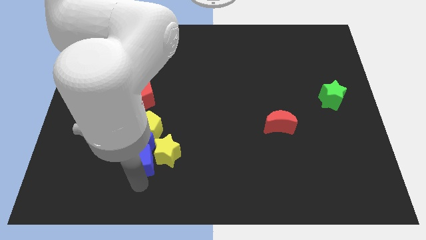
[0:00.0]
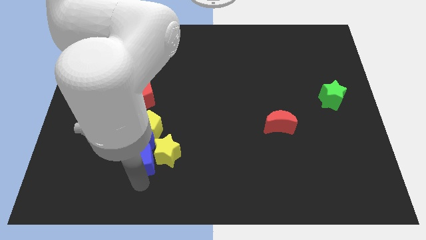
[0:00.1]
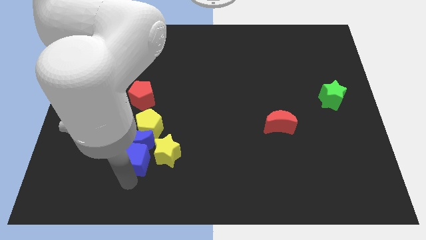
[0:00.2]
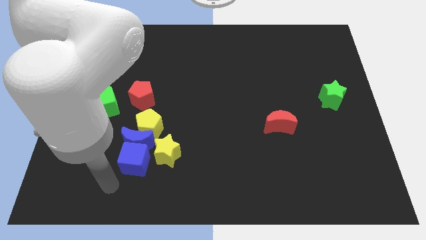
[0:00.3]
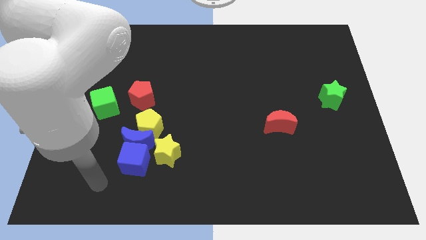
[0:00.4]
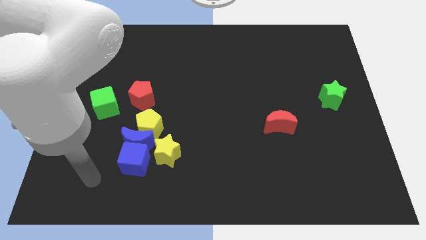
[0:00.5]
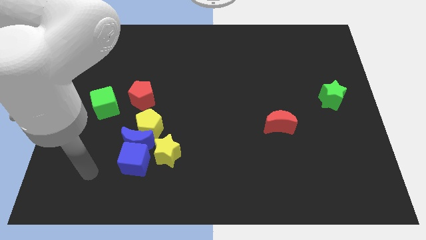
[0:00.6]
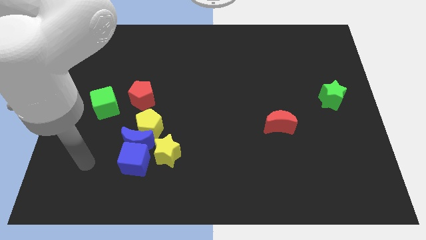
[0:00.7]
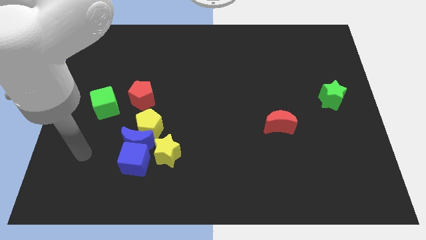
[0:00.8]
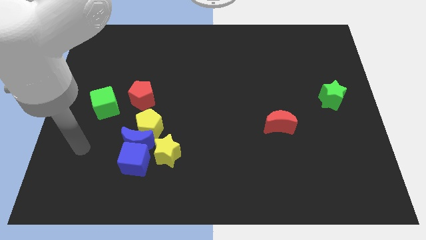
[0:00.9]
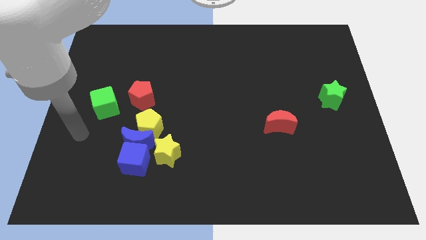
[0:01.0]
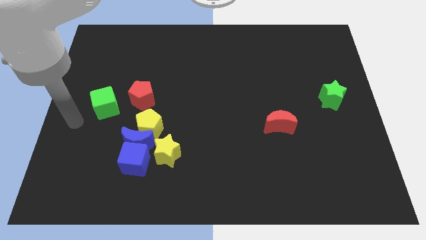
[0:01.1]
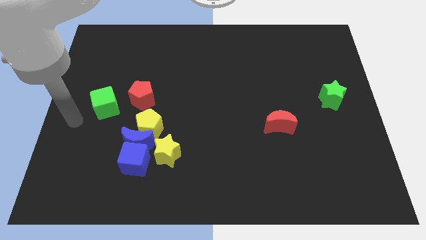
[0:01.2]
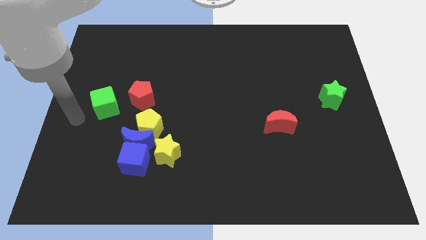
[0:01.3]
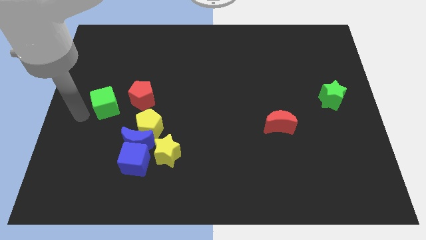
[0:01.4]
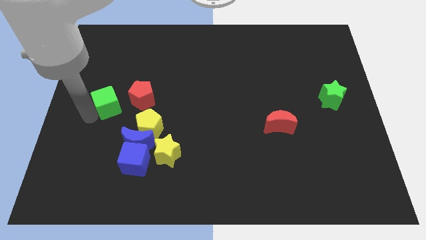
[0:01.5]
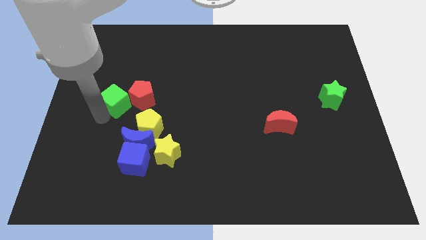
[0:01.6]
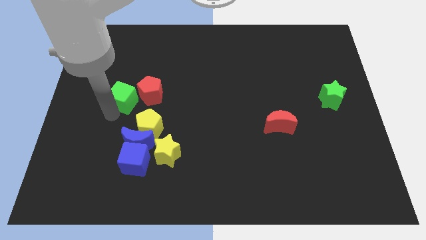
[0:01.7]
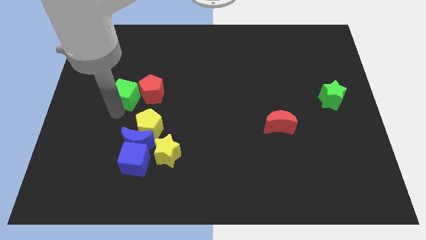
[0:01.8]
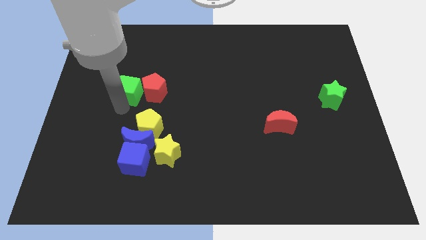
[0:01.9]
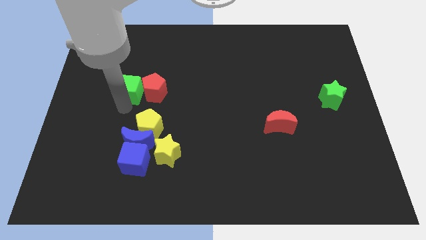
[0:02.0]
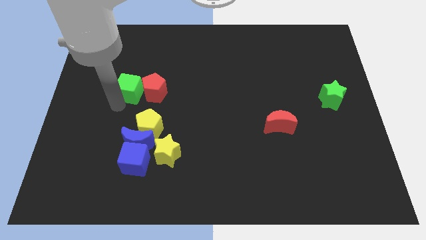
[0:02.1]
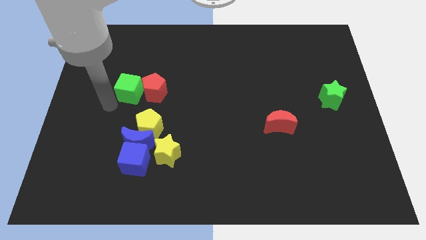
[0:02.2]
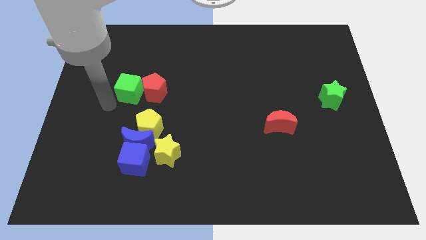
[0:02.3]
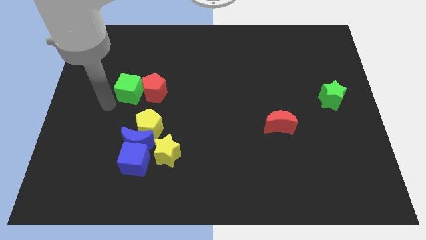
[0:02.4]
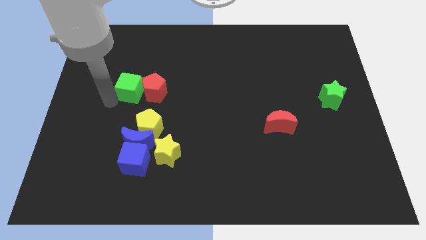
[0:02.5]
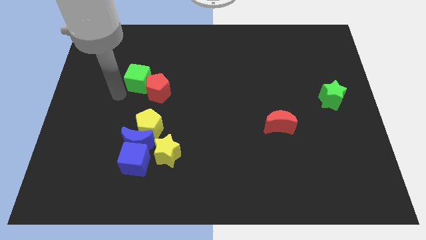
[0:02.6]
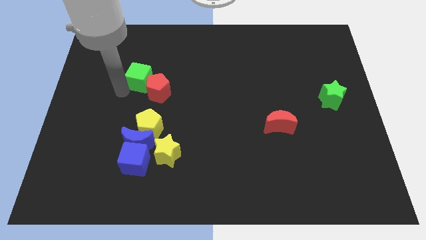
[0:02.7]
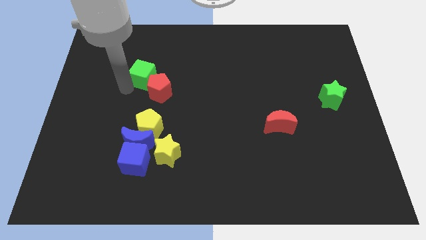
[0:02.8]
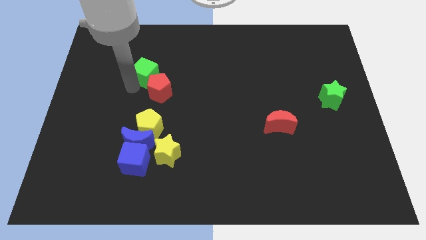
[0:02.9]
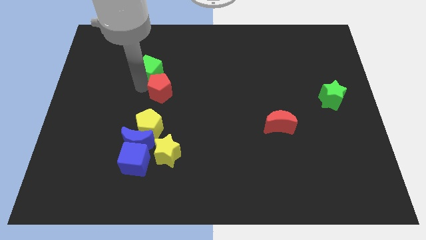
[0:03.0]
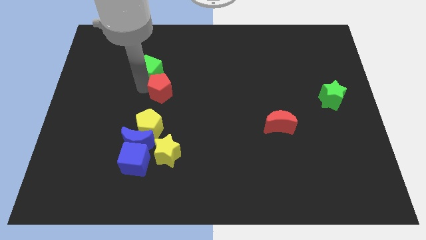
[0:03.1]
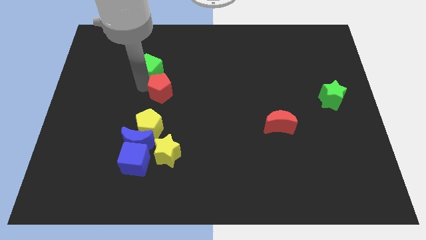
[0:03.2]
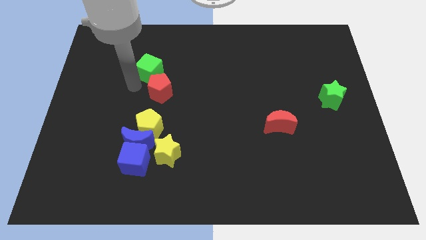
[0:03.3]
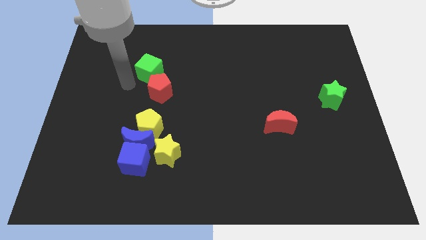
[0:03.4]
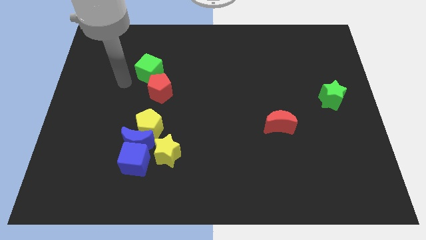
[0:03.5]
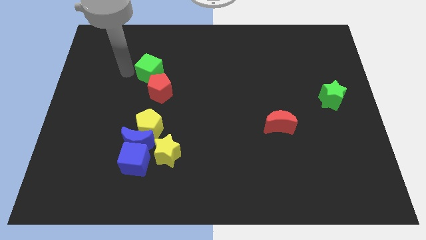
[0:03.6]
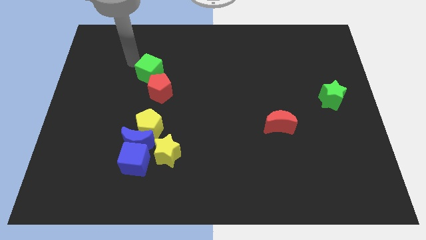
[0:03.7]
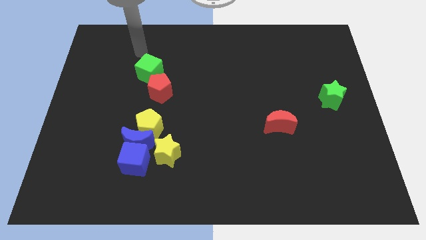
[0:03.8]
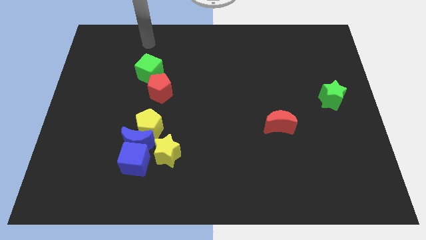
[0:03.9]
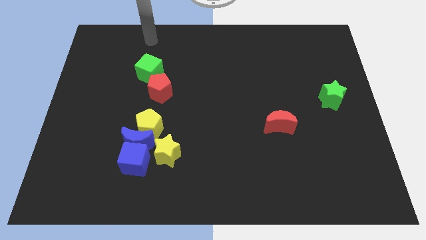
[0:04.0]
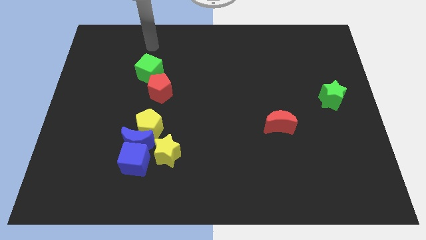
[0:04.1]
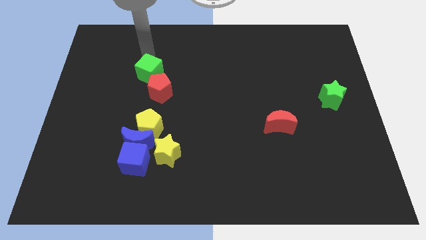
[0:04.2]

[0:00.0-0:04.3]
place the green cube at the top left of the red pentagon

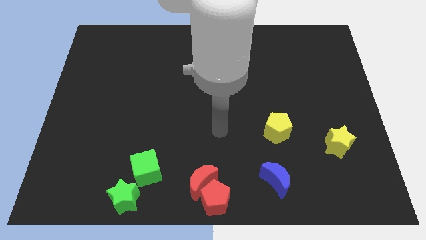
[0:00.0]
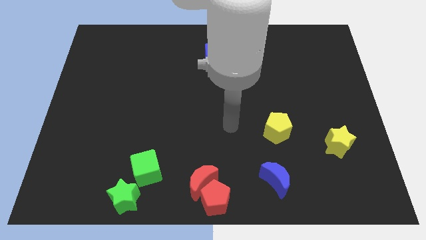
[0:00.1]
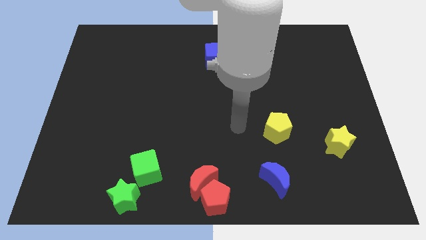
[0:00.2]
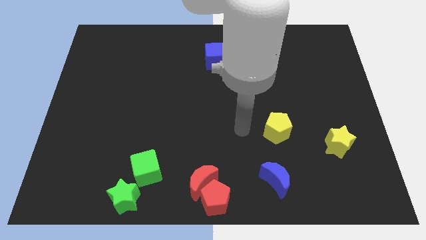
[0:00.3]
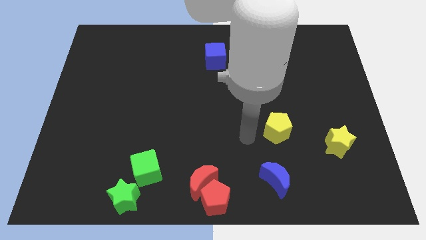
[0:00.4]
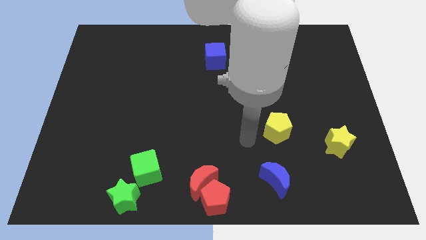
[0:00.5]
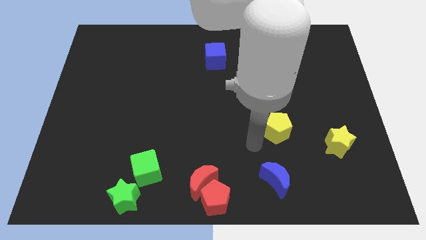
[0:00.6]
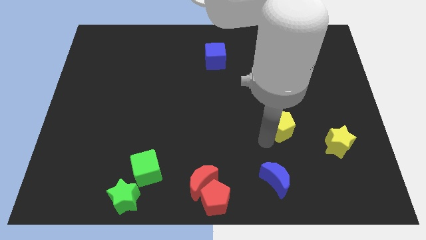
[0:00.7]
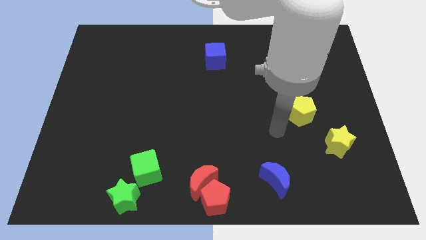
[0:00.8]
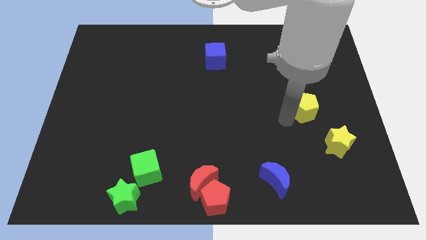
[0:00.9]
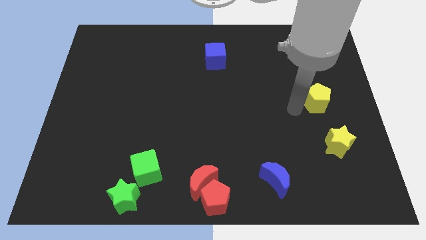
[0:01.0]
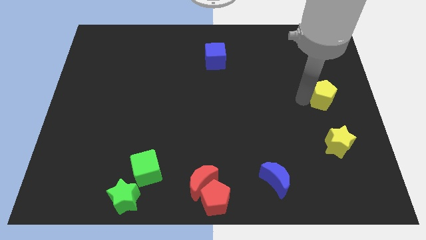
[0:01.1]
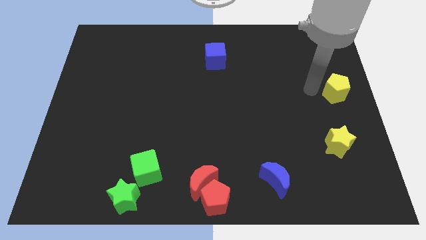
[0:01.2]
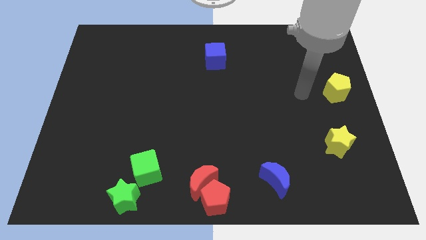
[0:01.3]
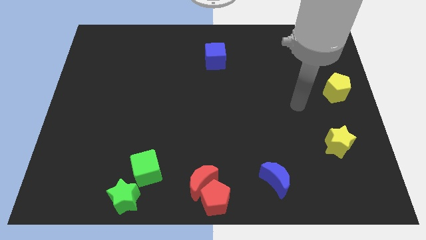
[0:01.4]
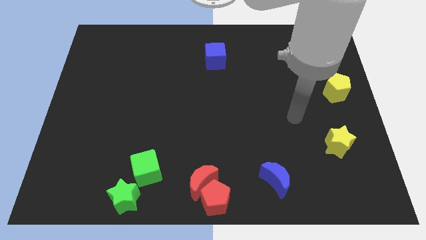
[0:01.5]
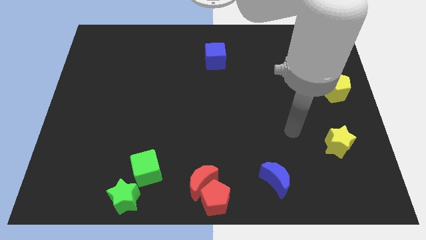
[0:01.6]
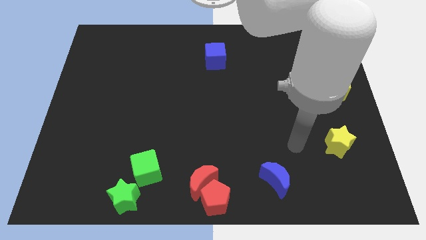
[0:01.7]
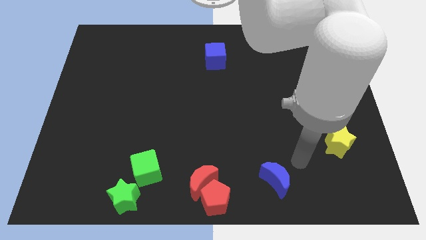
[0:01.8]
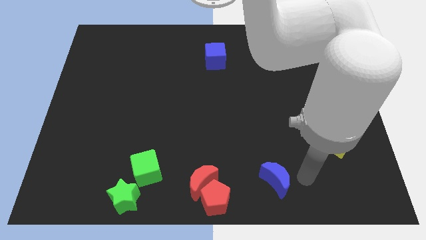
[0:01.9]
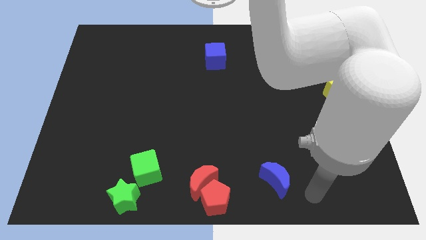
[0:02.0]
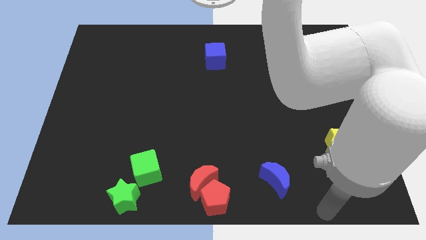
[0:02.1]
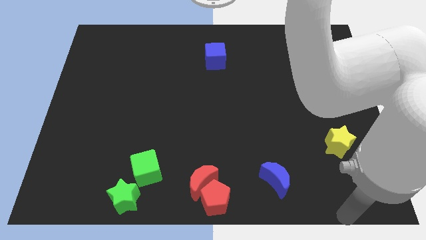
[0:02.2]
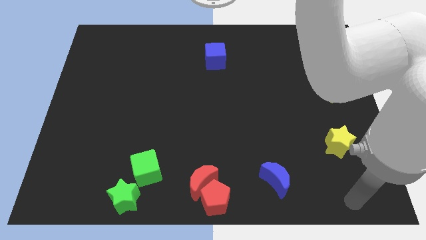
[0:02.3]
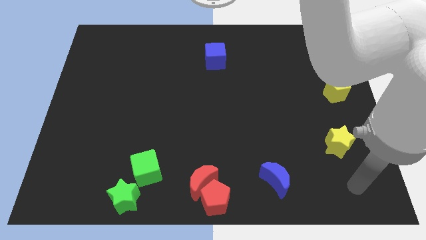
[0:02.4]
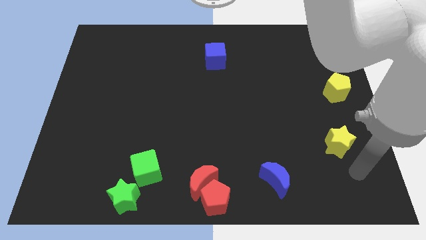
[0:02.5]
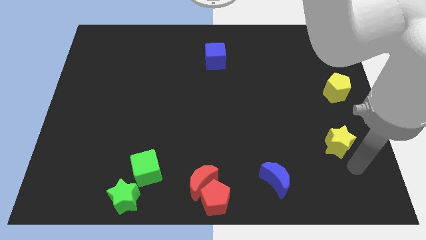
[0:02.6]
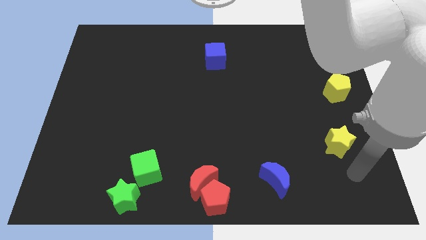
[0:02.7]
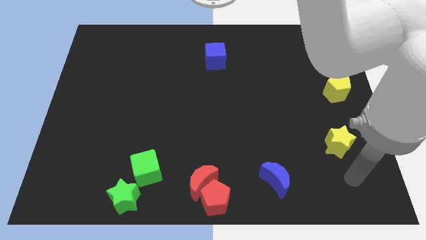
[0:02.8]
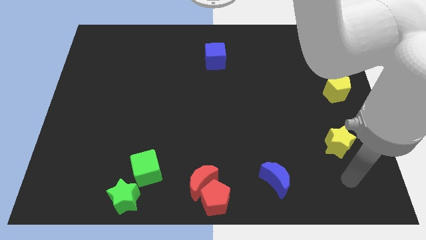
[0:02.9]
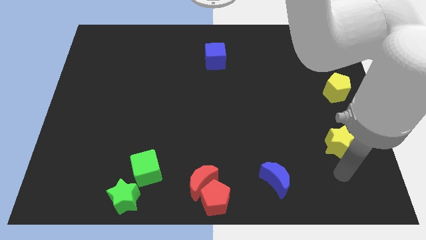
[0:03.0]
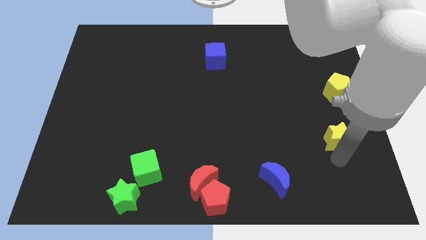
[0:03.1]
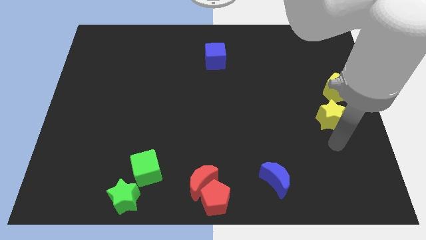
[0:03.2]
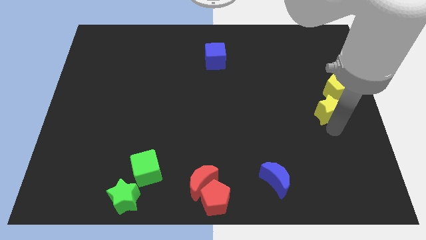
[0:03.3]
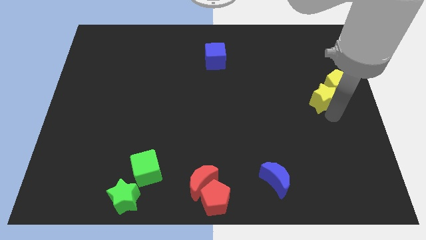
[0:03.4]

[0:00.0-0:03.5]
push the yellow star into the yellow pentagon

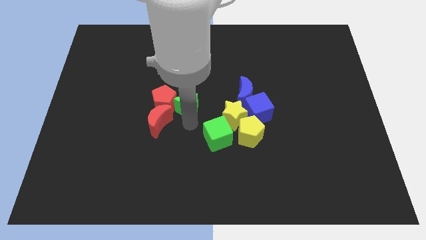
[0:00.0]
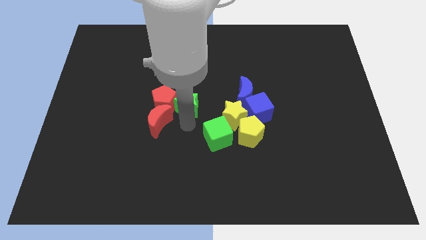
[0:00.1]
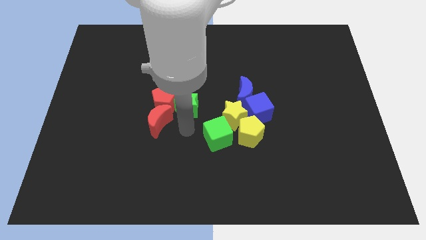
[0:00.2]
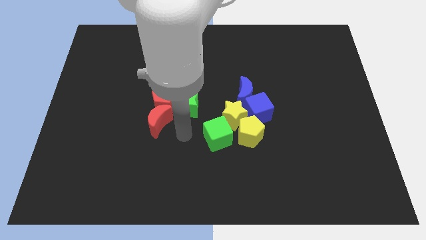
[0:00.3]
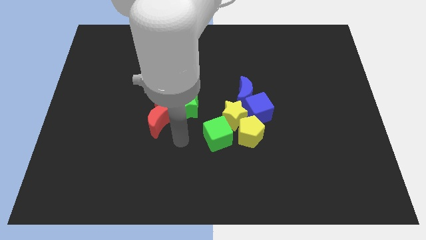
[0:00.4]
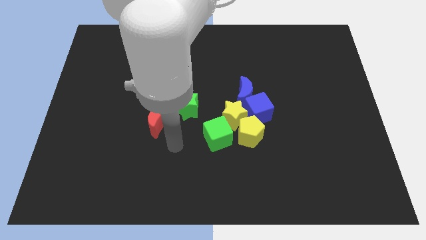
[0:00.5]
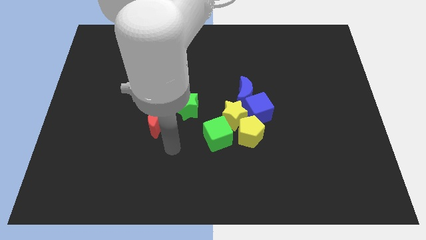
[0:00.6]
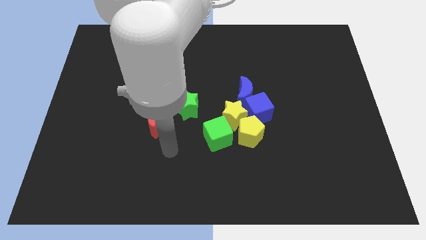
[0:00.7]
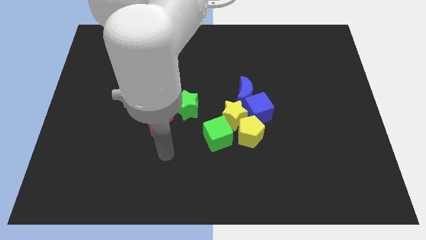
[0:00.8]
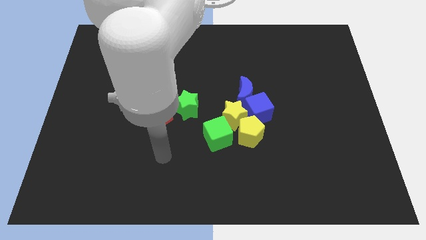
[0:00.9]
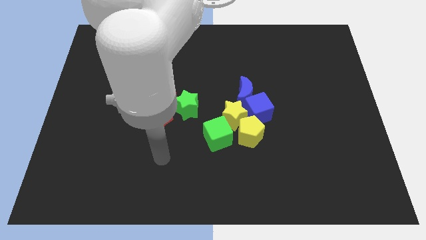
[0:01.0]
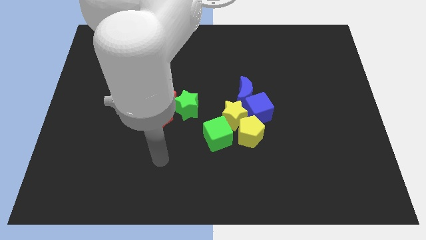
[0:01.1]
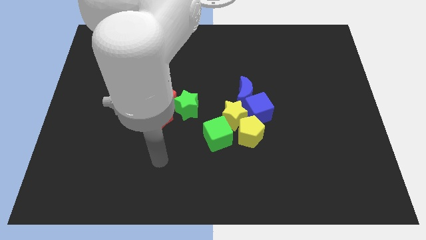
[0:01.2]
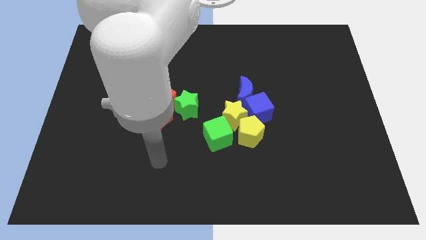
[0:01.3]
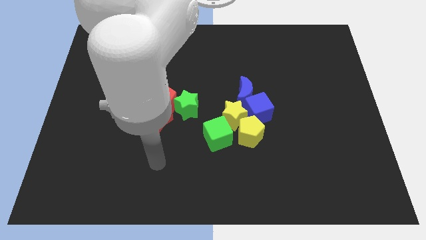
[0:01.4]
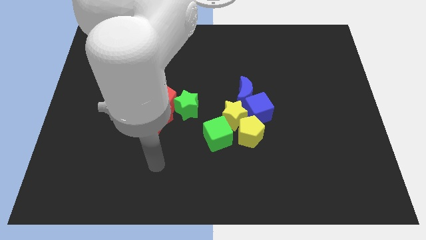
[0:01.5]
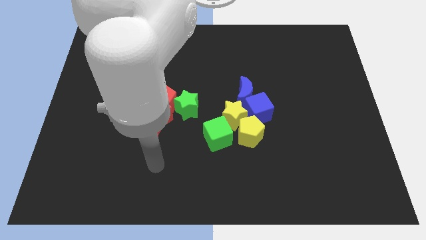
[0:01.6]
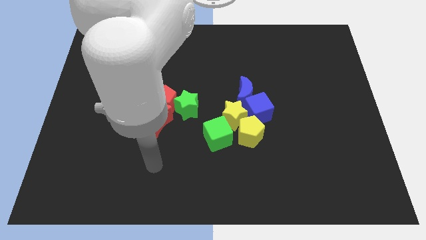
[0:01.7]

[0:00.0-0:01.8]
go away from the green star
